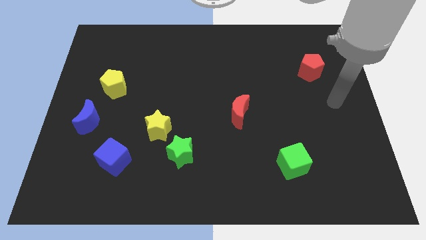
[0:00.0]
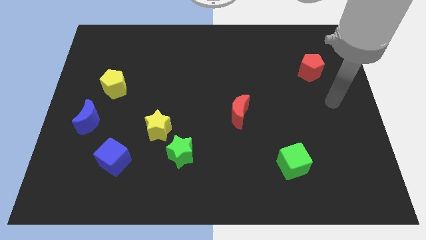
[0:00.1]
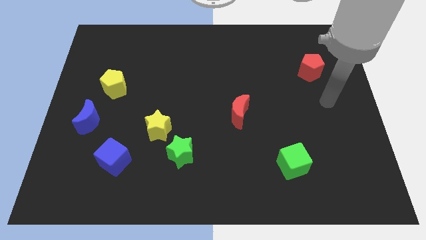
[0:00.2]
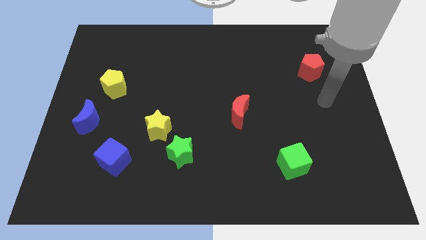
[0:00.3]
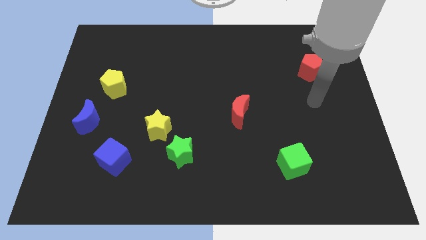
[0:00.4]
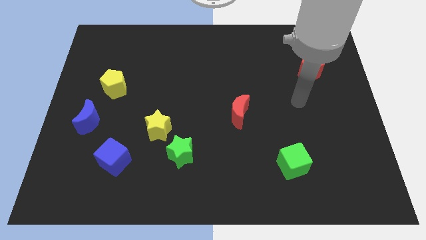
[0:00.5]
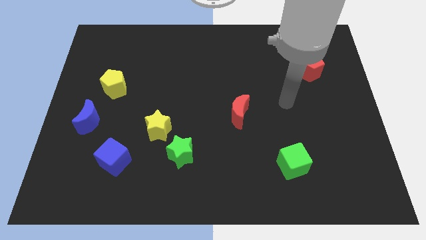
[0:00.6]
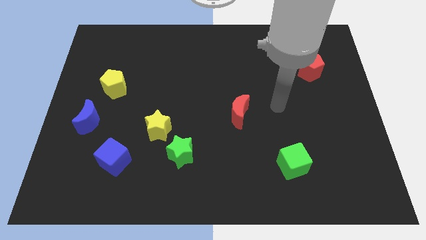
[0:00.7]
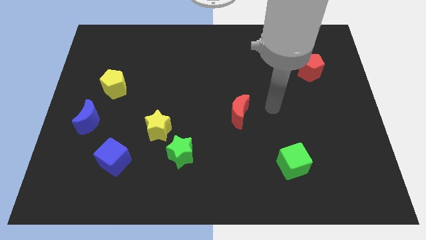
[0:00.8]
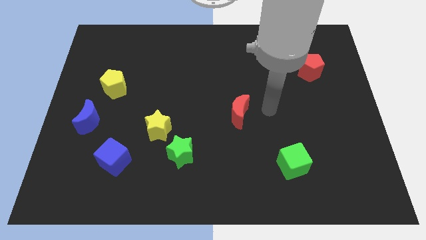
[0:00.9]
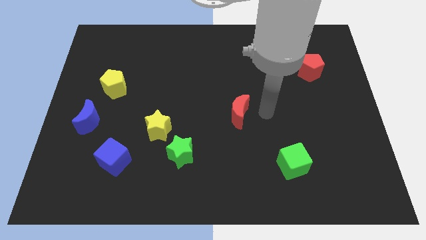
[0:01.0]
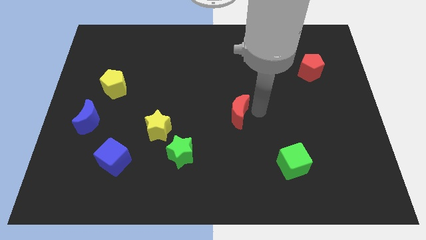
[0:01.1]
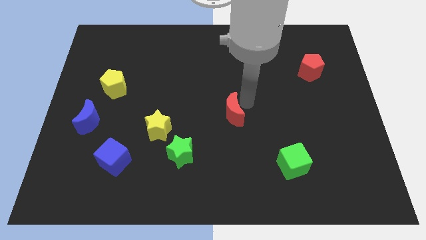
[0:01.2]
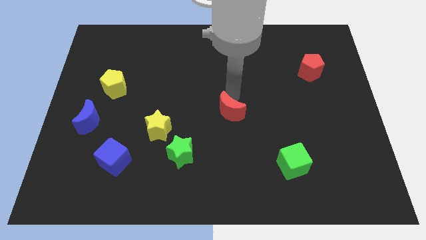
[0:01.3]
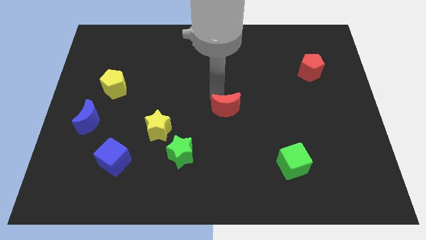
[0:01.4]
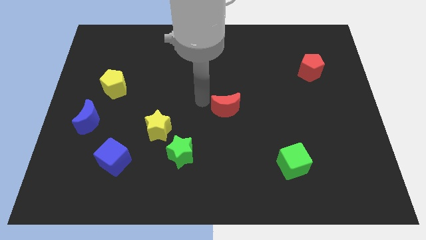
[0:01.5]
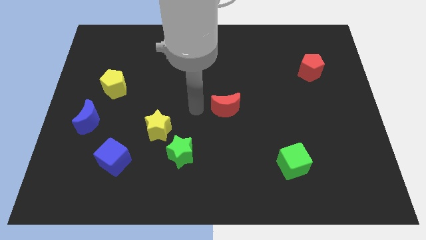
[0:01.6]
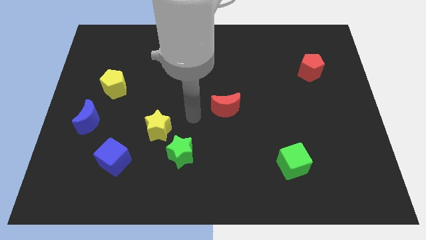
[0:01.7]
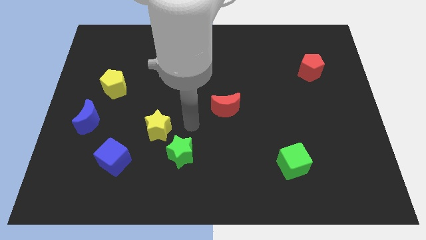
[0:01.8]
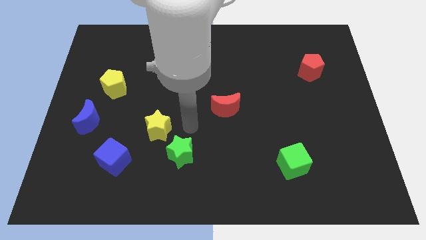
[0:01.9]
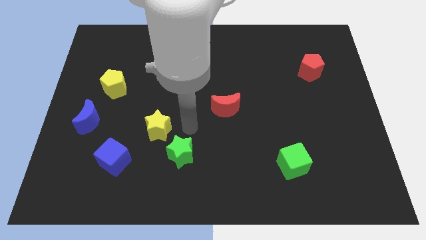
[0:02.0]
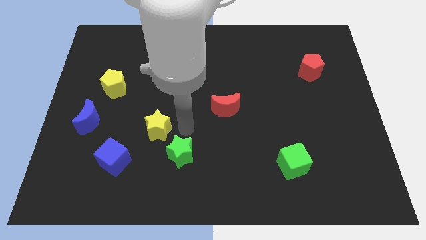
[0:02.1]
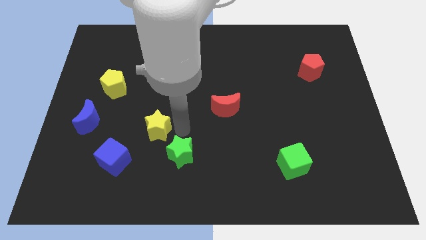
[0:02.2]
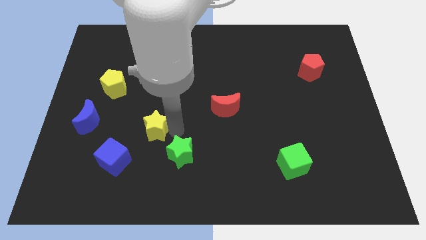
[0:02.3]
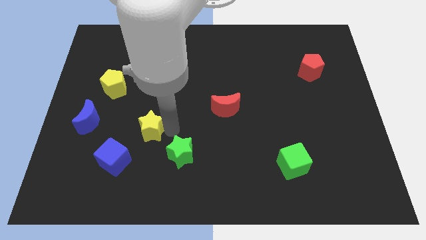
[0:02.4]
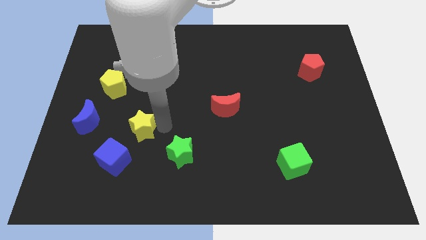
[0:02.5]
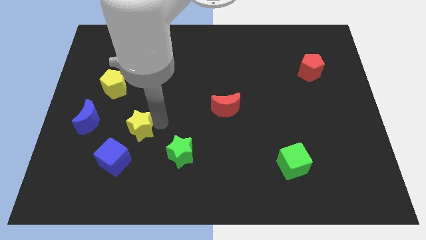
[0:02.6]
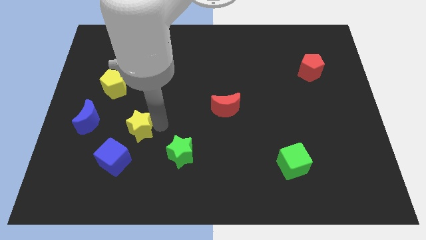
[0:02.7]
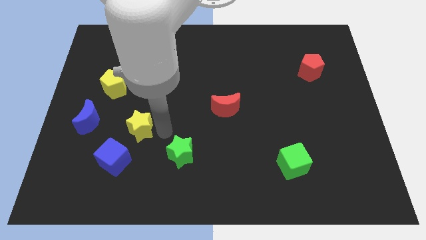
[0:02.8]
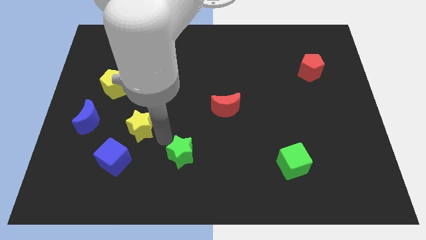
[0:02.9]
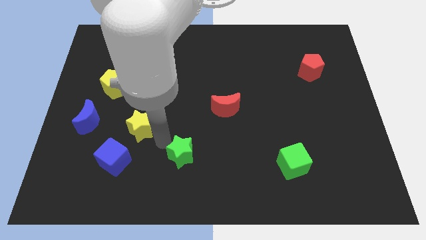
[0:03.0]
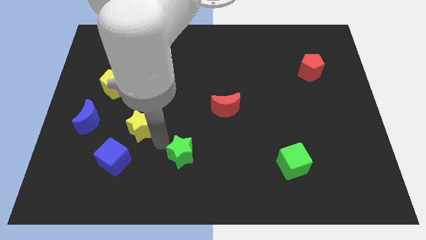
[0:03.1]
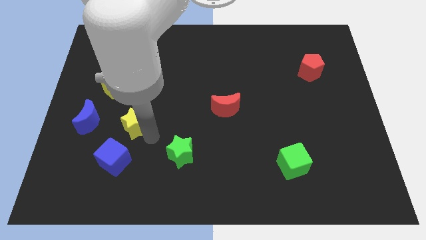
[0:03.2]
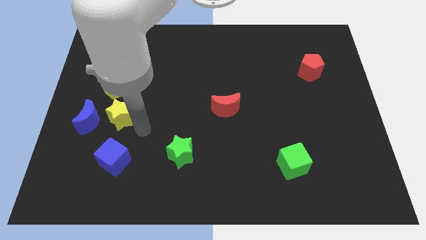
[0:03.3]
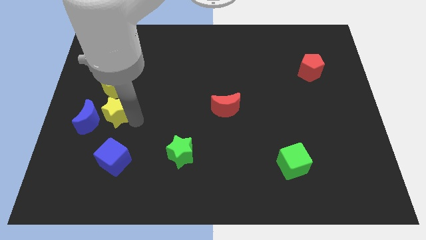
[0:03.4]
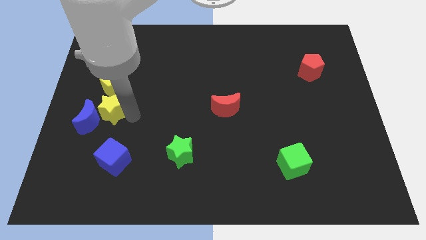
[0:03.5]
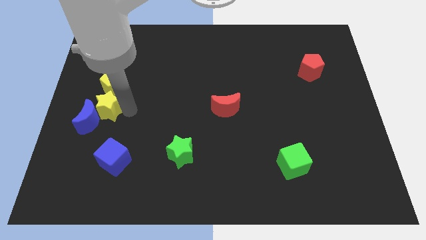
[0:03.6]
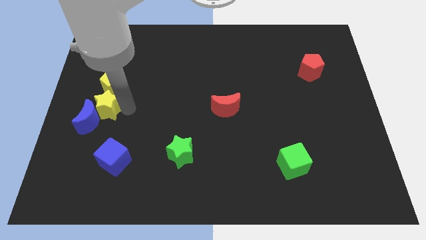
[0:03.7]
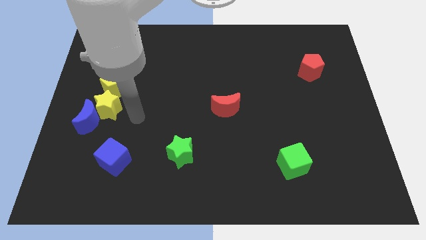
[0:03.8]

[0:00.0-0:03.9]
slide the yellow star at the bottom of the yellow pentagon

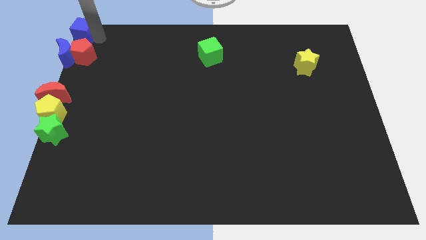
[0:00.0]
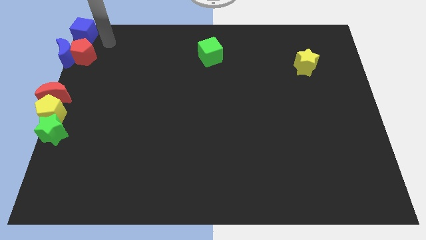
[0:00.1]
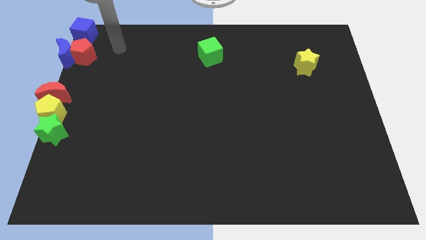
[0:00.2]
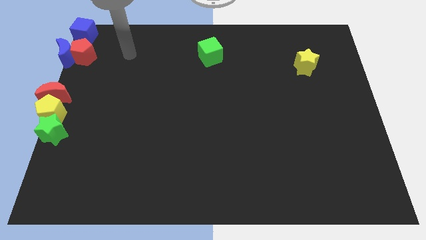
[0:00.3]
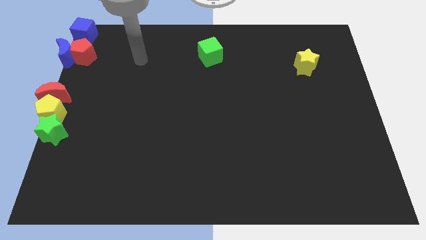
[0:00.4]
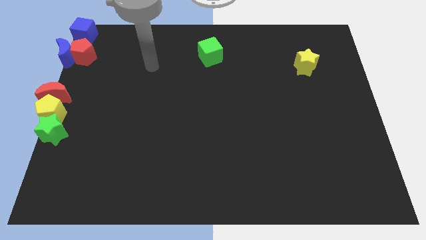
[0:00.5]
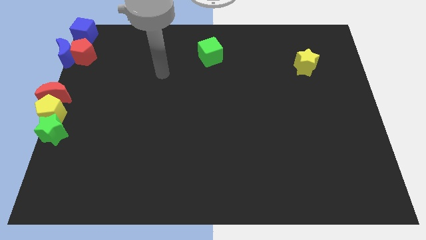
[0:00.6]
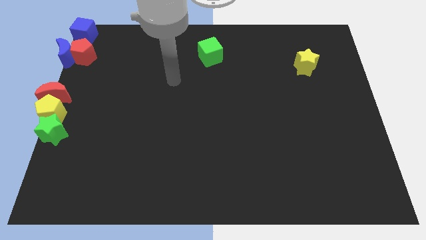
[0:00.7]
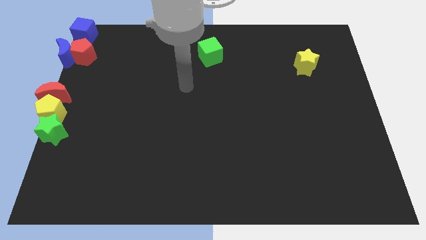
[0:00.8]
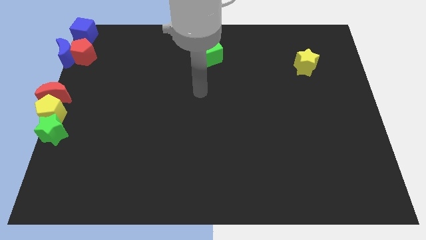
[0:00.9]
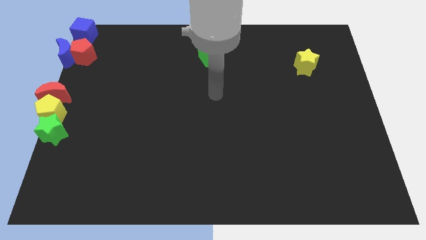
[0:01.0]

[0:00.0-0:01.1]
move the arm away from the blue cube

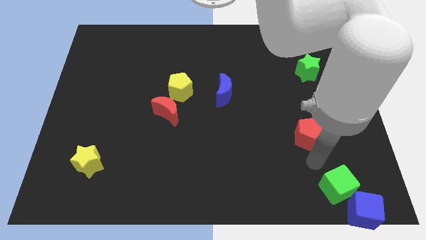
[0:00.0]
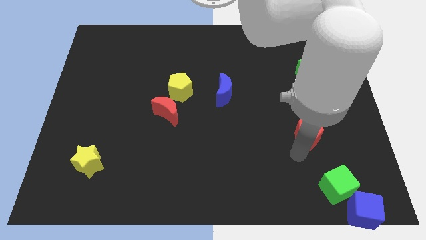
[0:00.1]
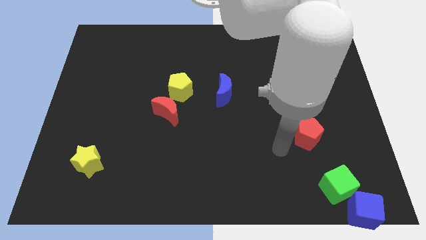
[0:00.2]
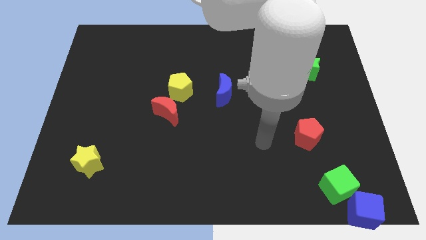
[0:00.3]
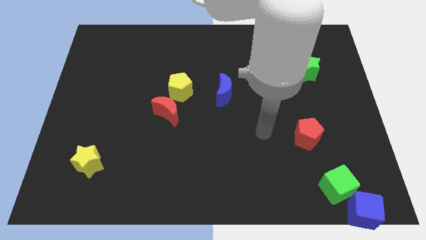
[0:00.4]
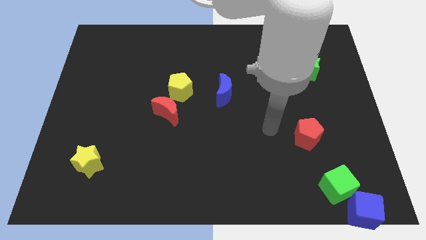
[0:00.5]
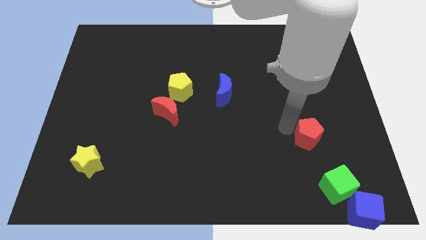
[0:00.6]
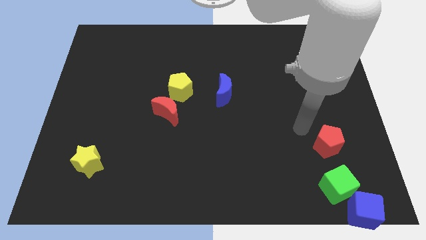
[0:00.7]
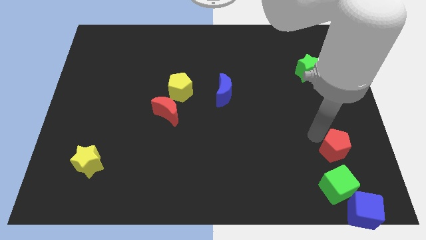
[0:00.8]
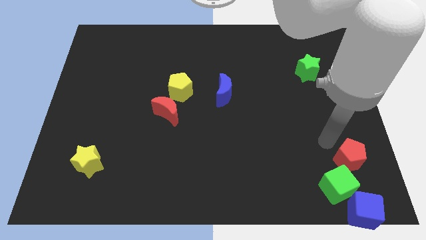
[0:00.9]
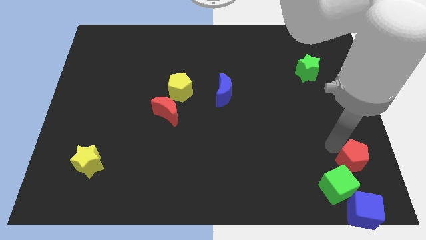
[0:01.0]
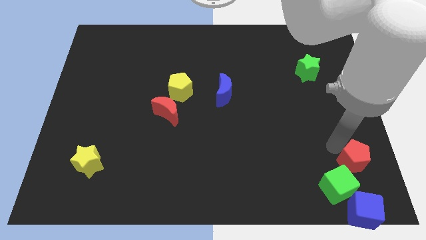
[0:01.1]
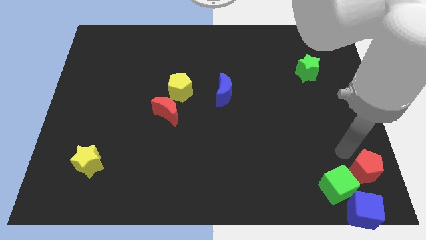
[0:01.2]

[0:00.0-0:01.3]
place red pentagon right to green cube

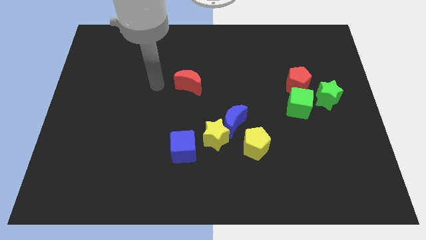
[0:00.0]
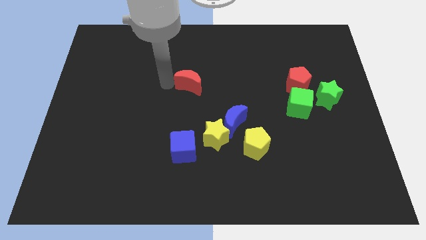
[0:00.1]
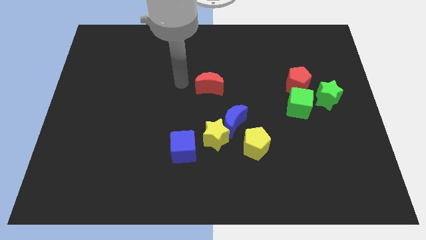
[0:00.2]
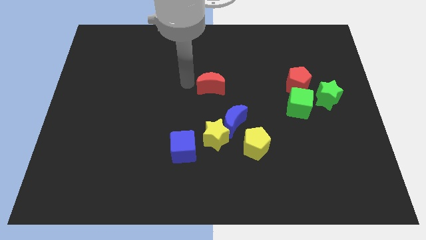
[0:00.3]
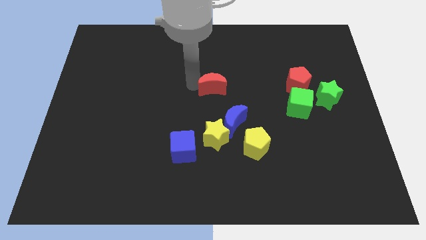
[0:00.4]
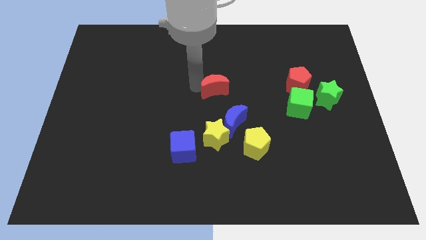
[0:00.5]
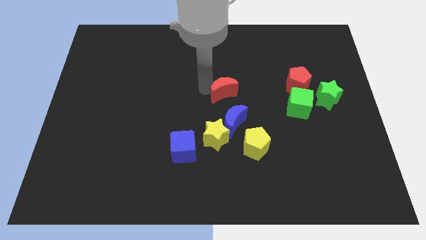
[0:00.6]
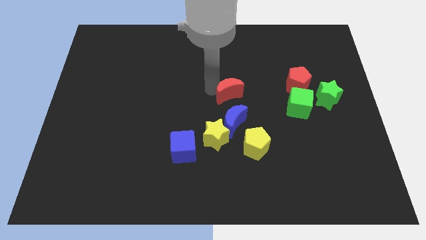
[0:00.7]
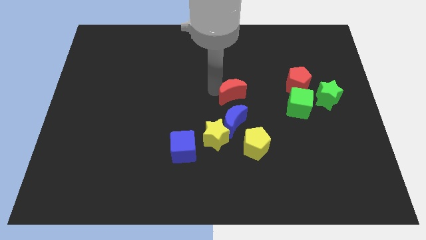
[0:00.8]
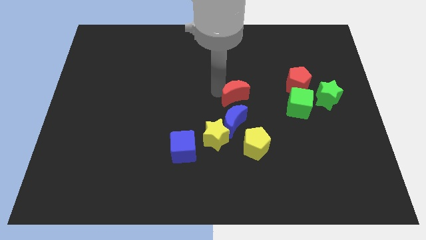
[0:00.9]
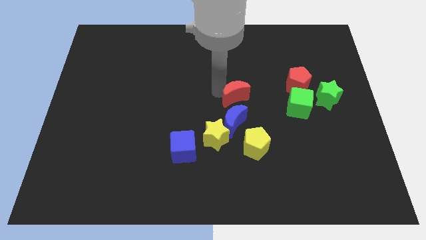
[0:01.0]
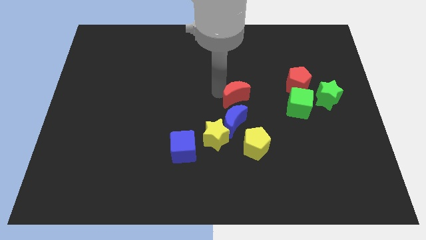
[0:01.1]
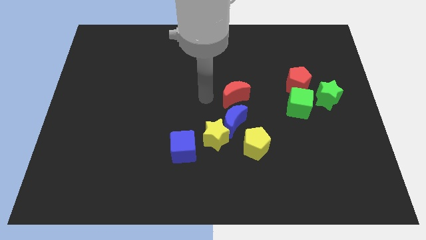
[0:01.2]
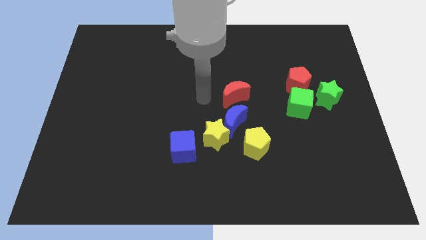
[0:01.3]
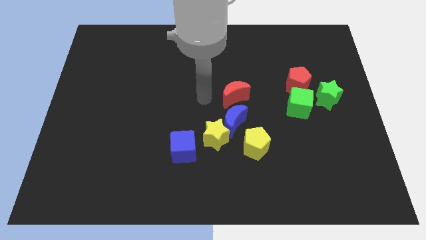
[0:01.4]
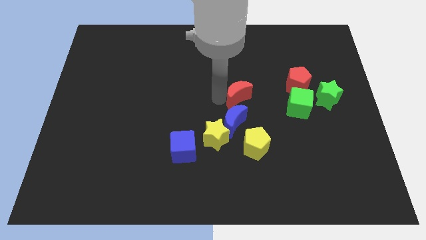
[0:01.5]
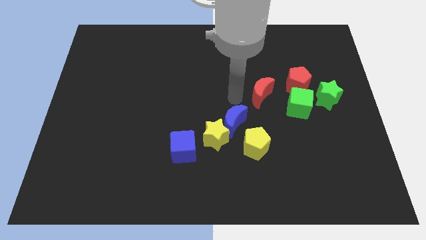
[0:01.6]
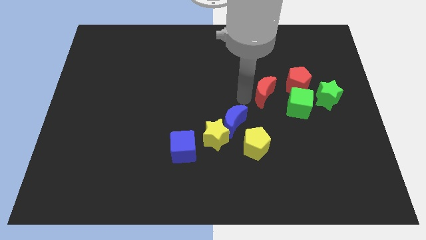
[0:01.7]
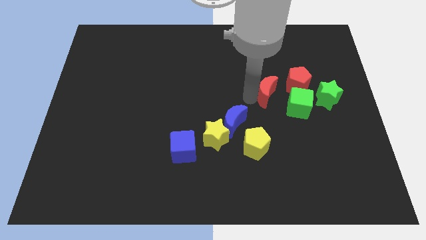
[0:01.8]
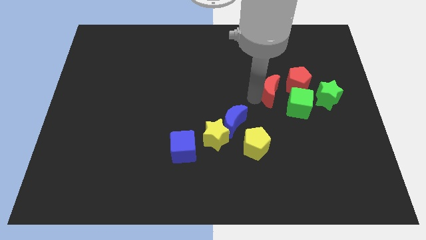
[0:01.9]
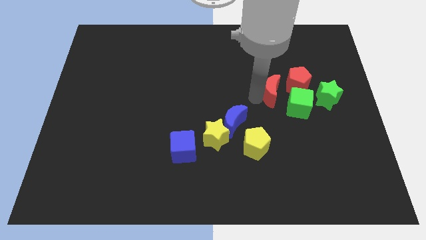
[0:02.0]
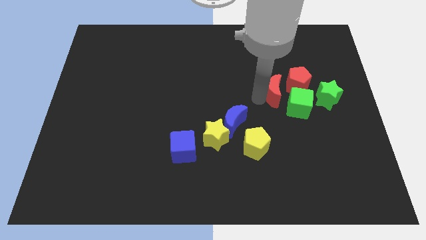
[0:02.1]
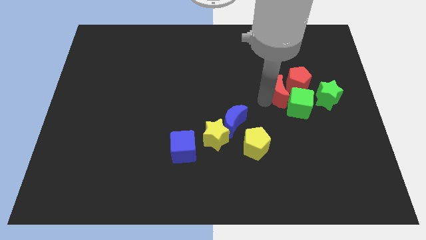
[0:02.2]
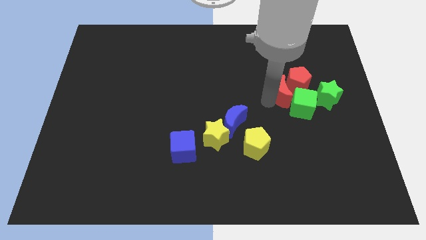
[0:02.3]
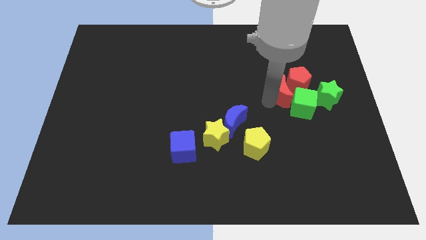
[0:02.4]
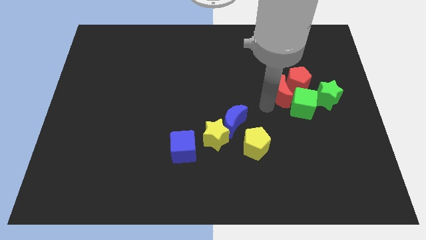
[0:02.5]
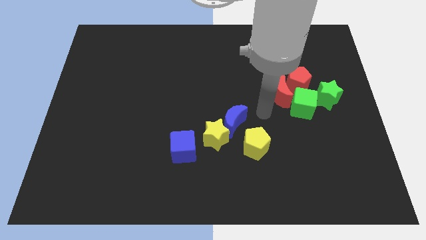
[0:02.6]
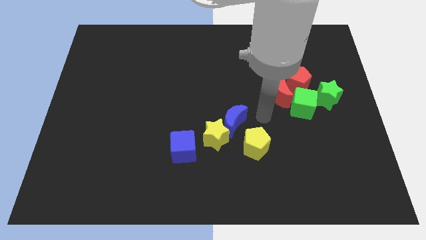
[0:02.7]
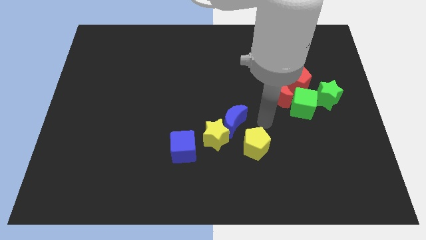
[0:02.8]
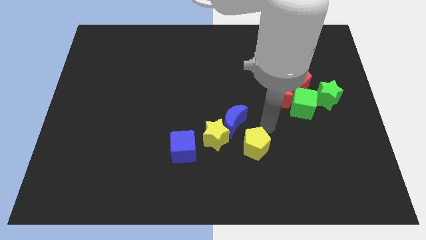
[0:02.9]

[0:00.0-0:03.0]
slide the red crescent into the red pentagon and green cube
